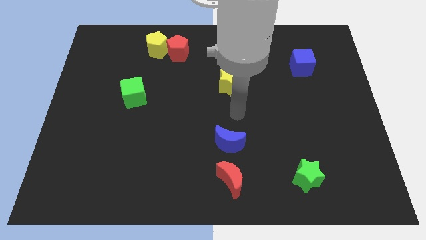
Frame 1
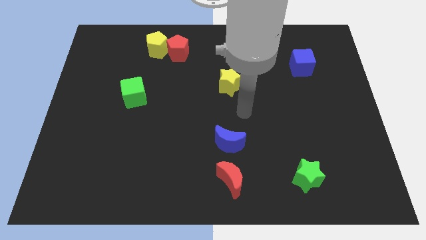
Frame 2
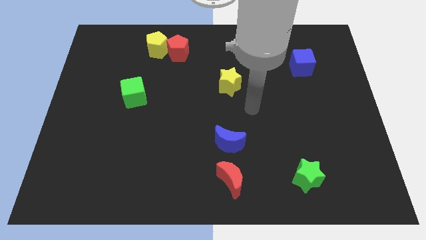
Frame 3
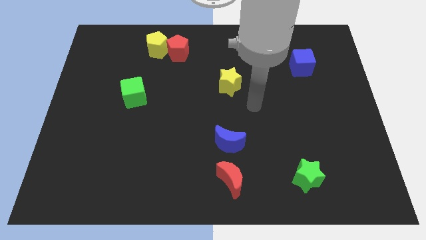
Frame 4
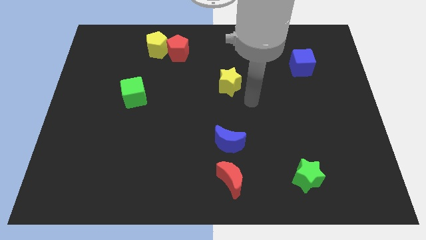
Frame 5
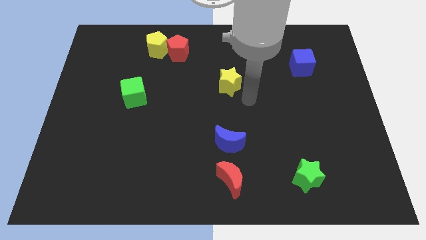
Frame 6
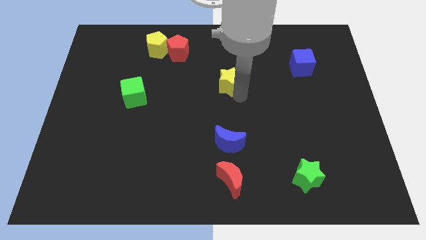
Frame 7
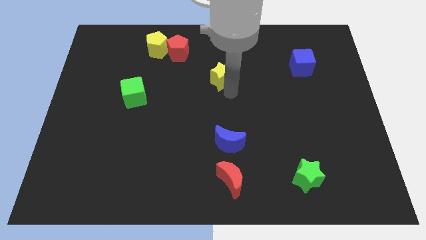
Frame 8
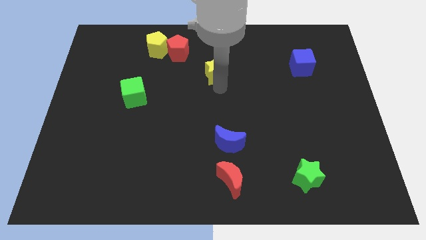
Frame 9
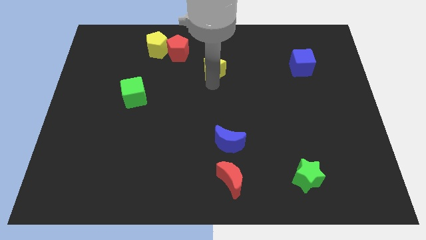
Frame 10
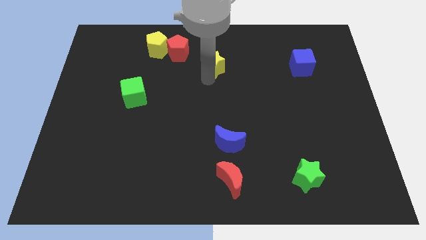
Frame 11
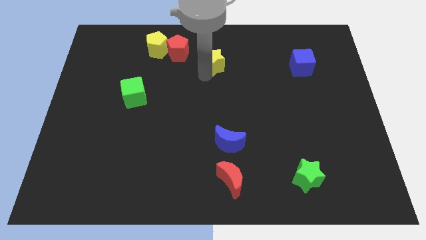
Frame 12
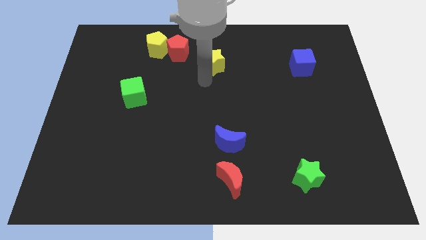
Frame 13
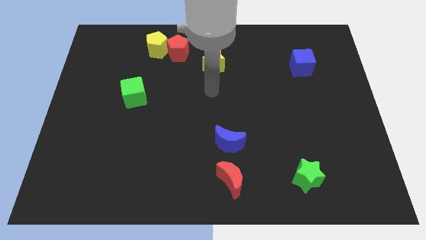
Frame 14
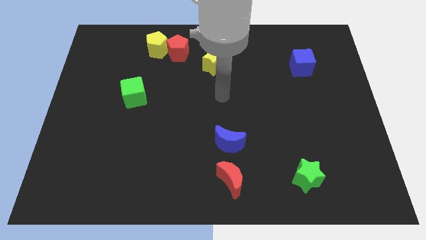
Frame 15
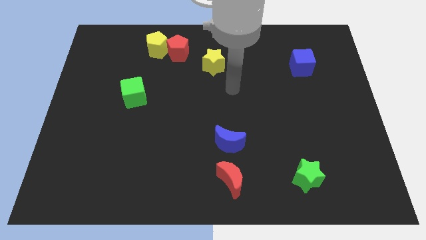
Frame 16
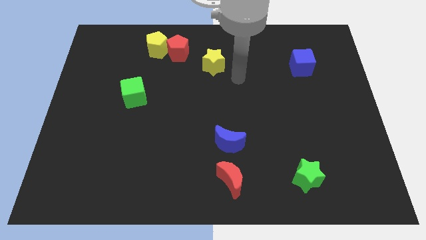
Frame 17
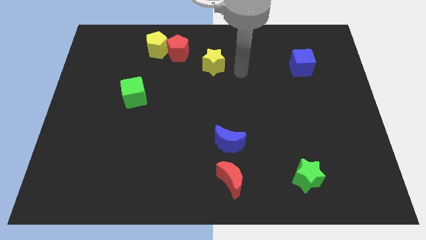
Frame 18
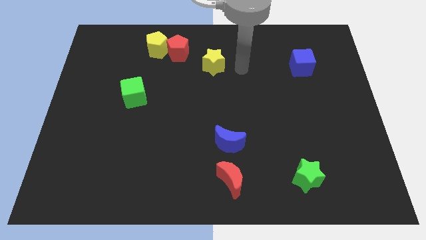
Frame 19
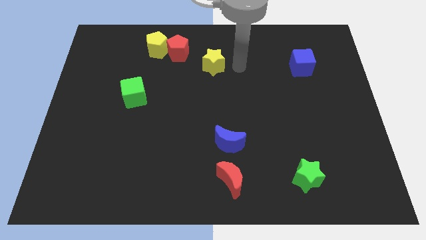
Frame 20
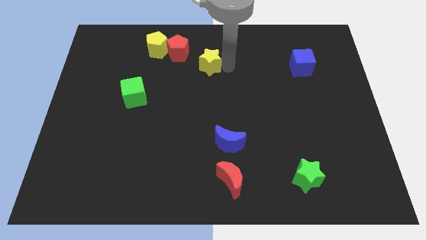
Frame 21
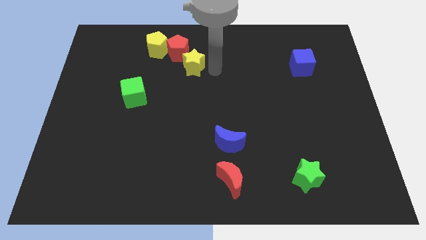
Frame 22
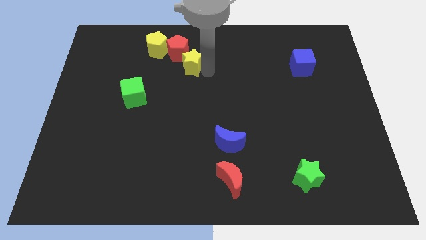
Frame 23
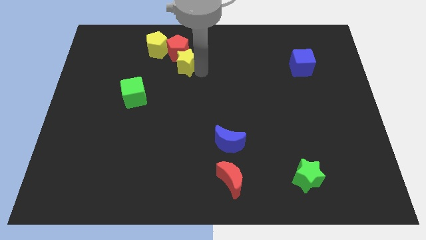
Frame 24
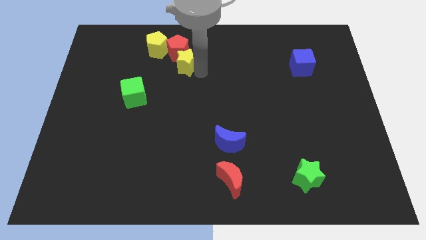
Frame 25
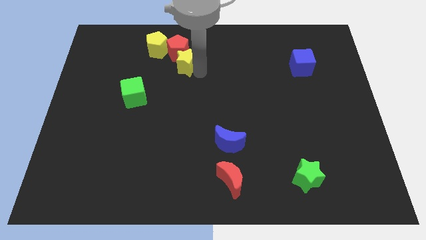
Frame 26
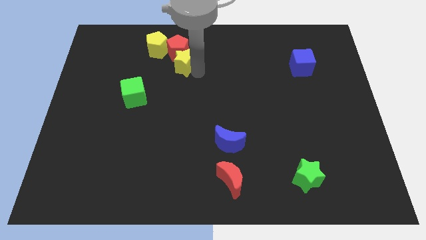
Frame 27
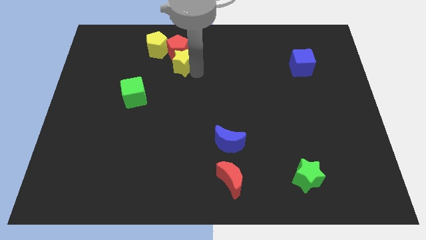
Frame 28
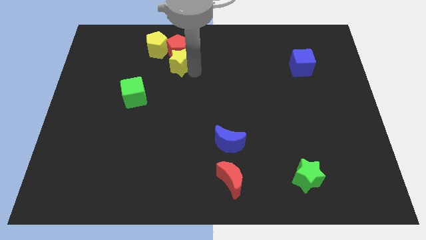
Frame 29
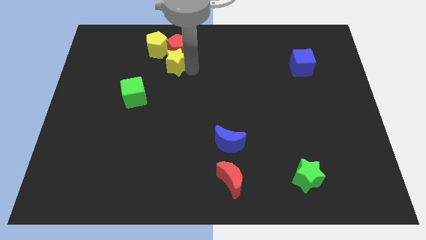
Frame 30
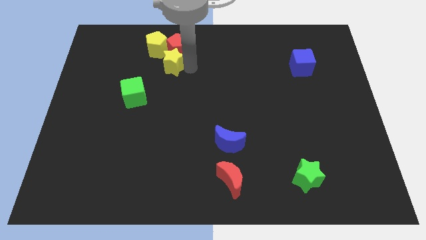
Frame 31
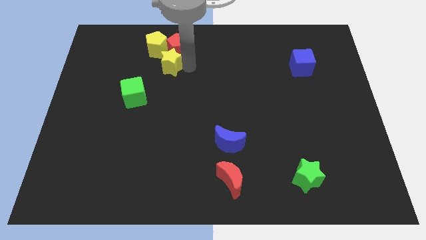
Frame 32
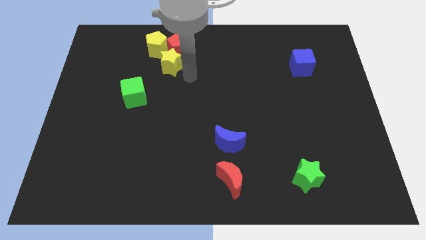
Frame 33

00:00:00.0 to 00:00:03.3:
place the yellow star below the red pentagon

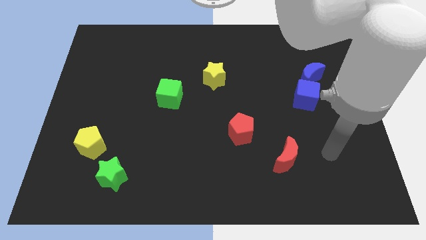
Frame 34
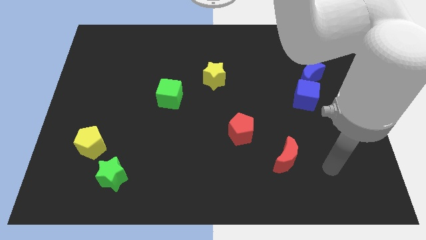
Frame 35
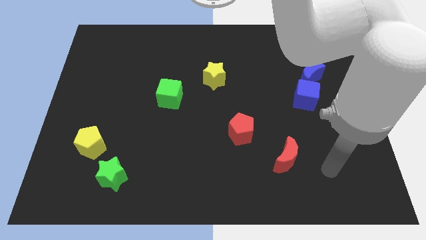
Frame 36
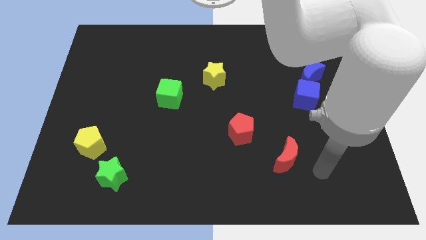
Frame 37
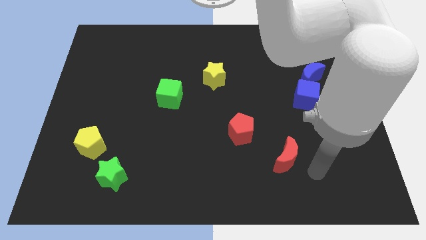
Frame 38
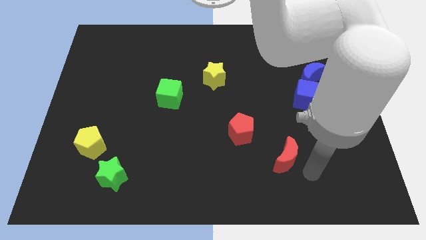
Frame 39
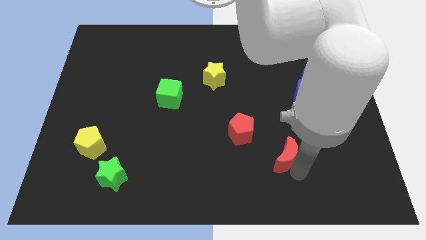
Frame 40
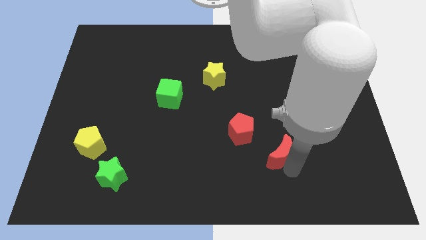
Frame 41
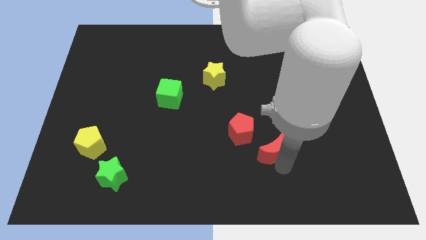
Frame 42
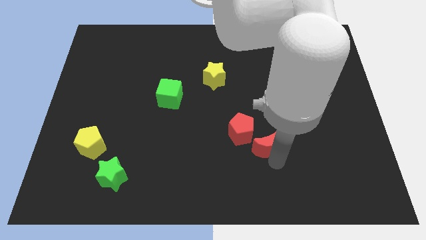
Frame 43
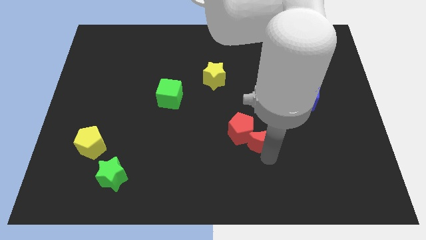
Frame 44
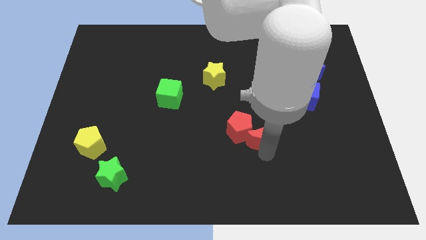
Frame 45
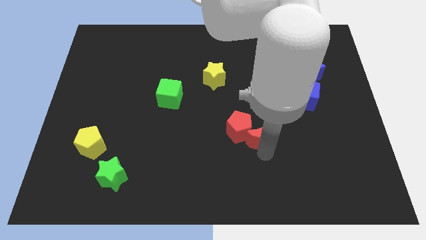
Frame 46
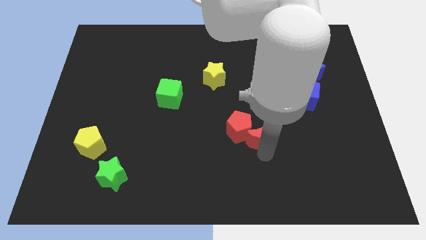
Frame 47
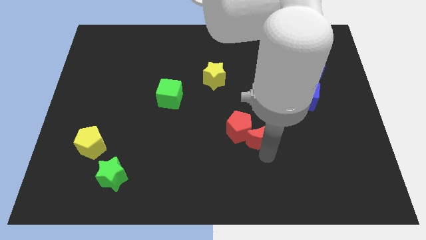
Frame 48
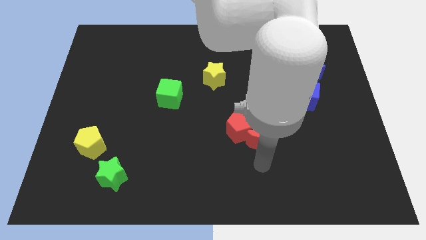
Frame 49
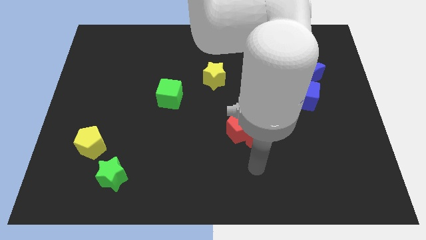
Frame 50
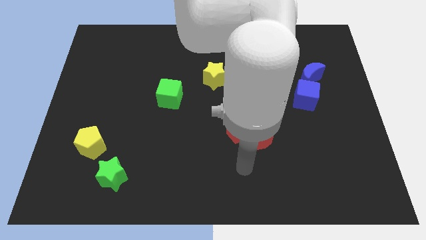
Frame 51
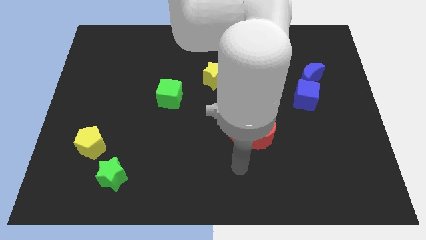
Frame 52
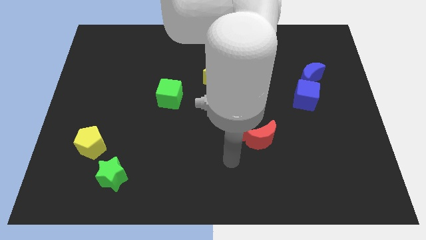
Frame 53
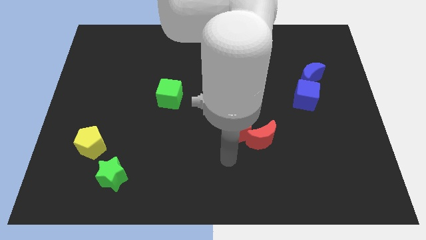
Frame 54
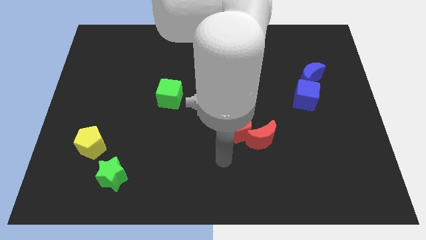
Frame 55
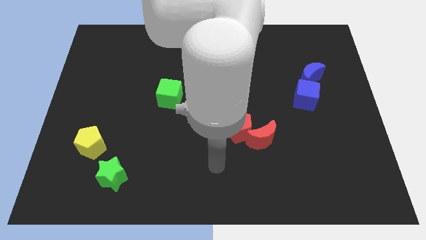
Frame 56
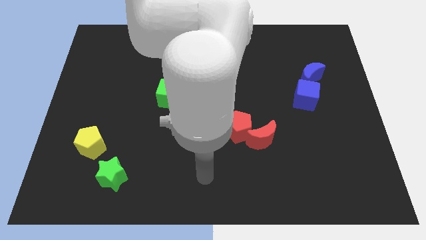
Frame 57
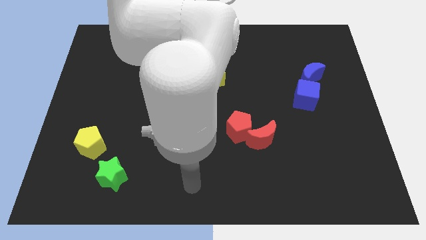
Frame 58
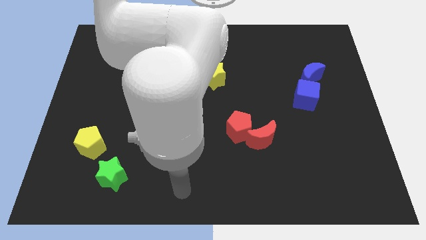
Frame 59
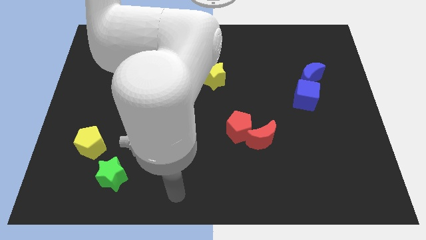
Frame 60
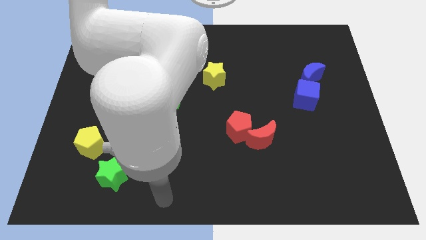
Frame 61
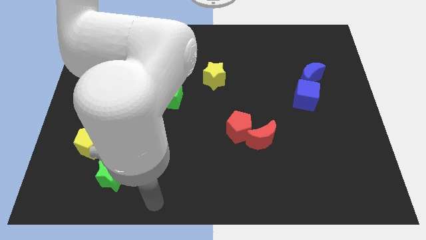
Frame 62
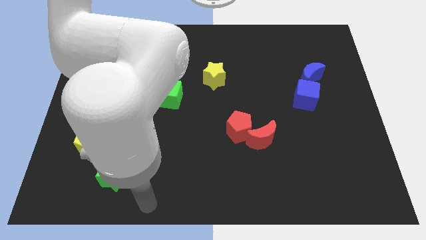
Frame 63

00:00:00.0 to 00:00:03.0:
move the red moon into the red pentagon

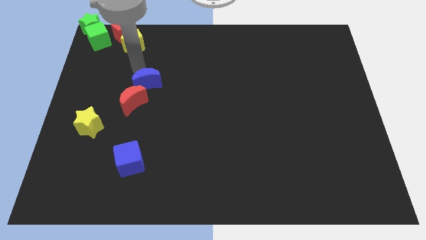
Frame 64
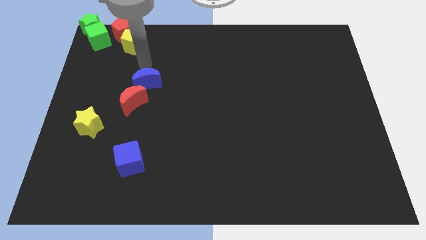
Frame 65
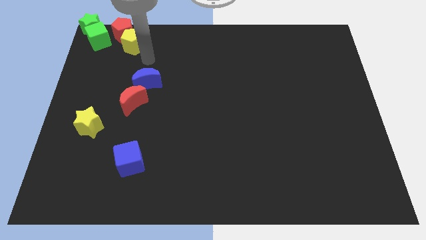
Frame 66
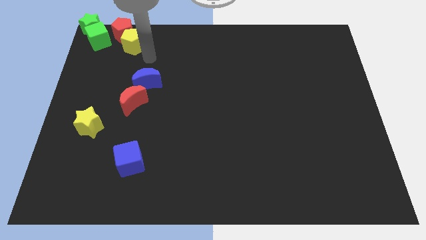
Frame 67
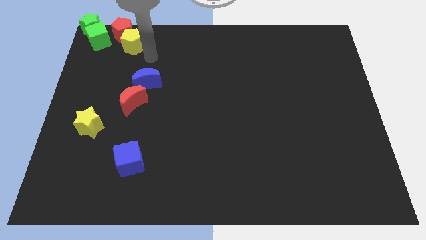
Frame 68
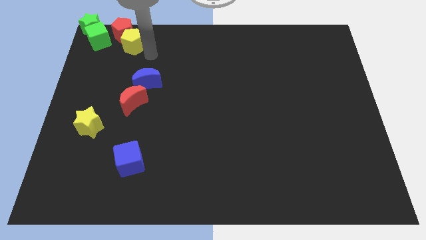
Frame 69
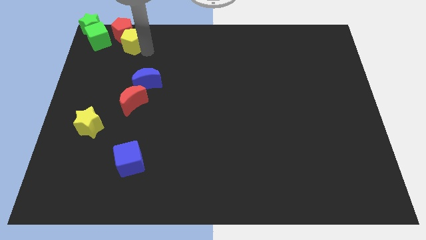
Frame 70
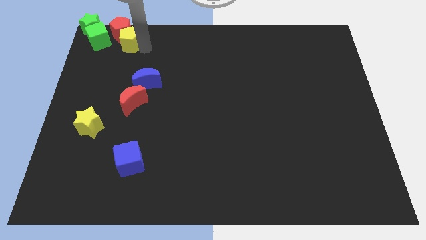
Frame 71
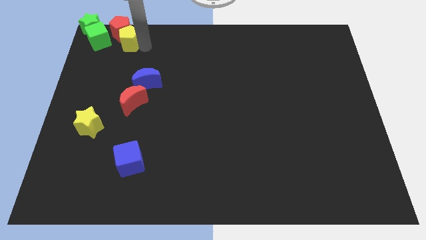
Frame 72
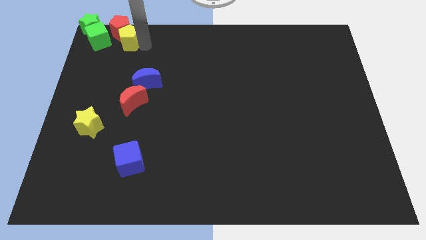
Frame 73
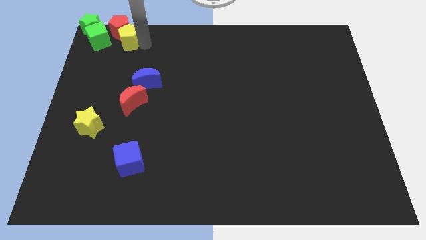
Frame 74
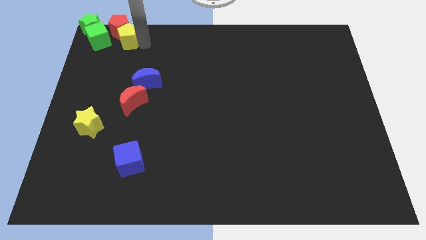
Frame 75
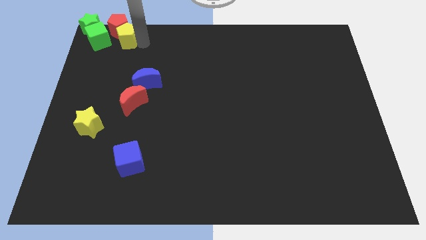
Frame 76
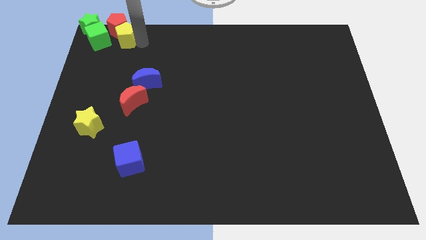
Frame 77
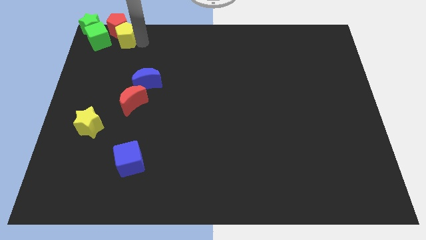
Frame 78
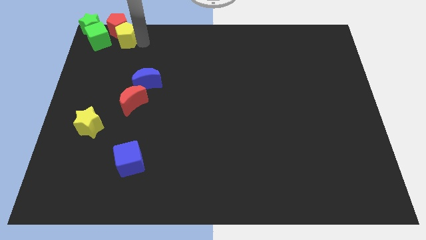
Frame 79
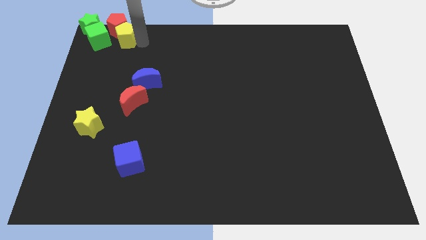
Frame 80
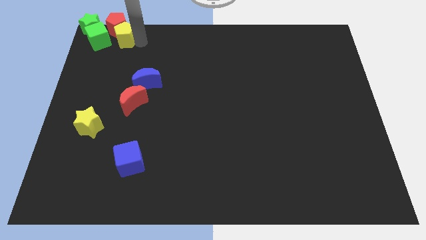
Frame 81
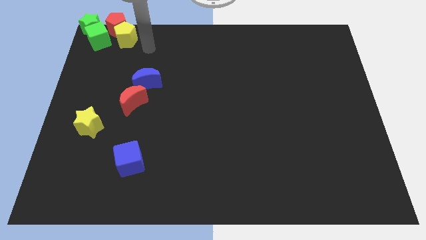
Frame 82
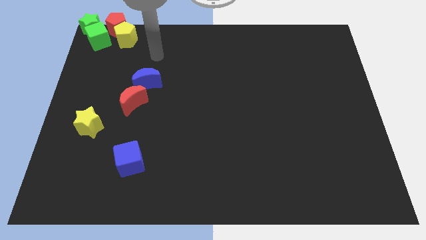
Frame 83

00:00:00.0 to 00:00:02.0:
push the red pentagon with the yellow pentagon to the right of the green blocks

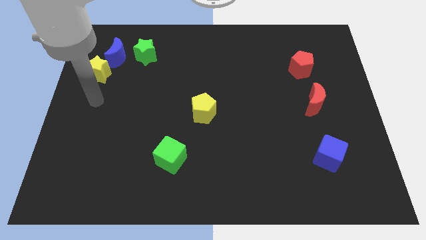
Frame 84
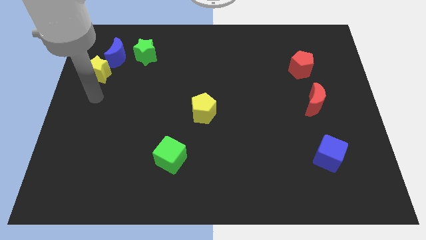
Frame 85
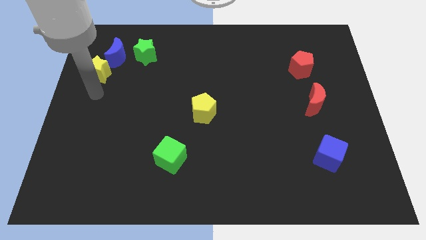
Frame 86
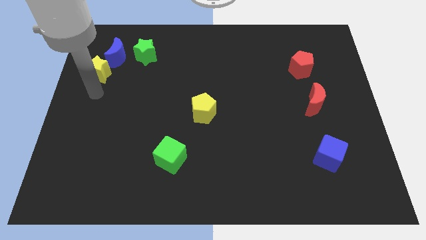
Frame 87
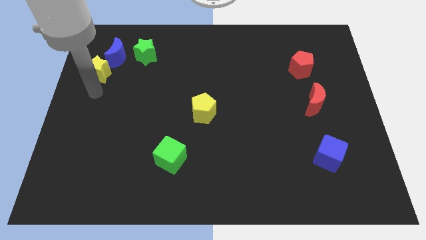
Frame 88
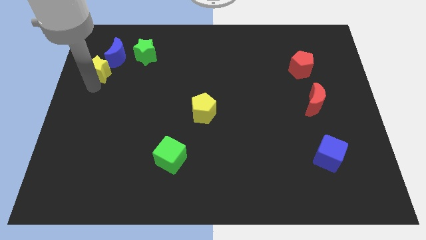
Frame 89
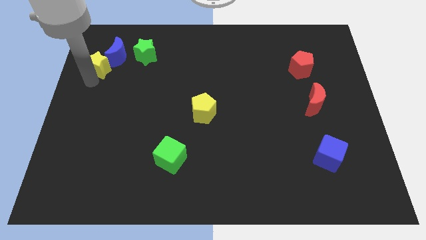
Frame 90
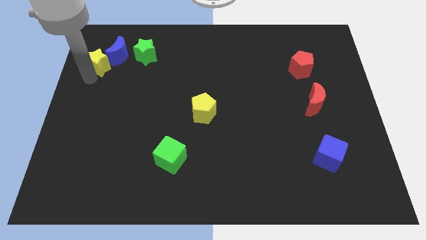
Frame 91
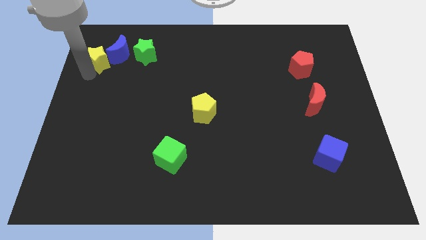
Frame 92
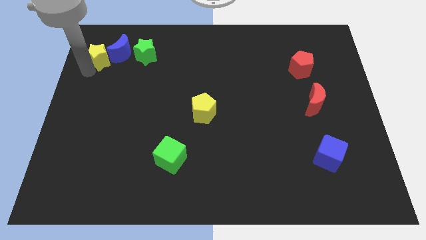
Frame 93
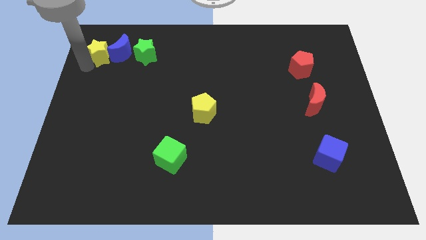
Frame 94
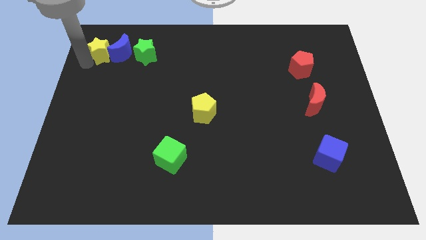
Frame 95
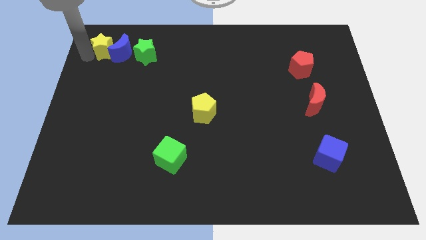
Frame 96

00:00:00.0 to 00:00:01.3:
push the yellow star to the left of the blue crescent
